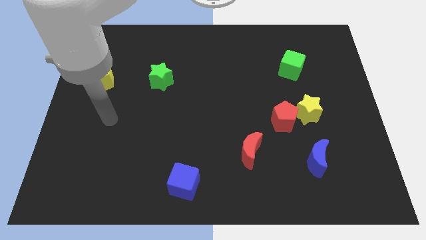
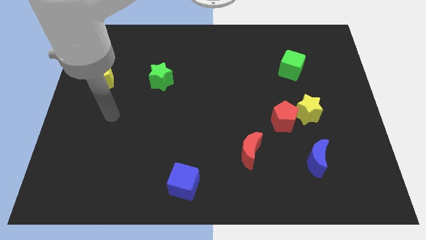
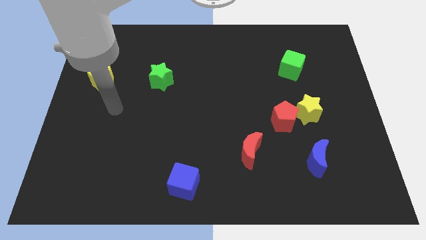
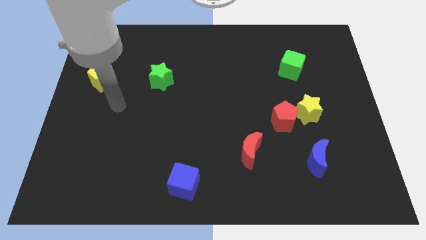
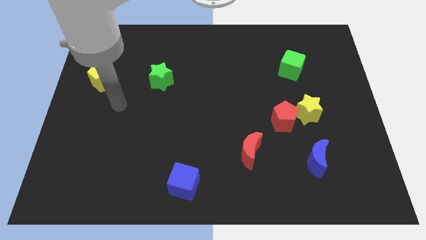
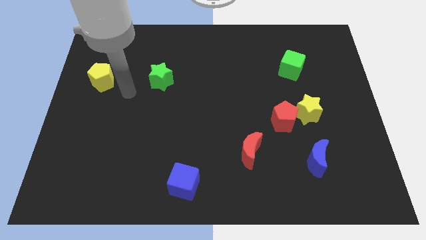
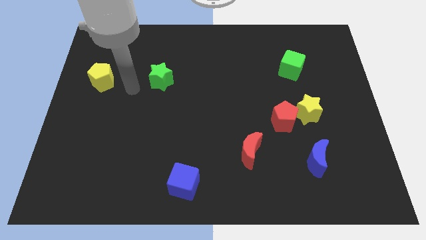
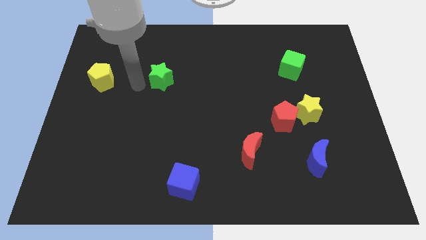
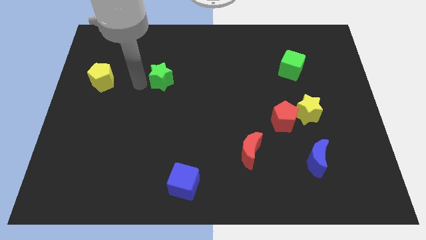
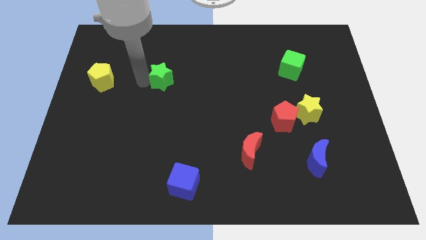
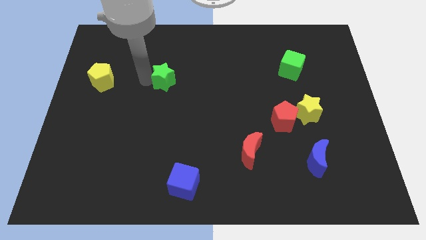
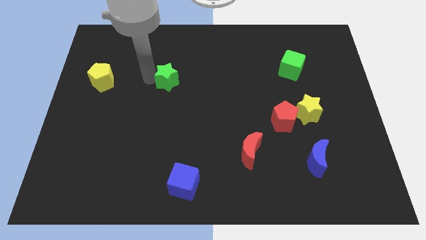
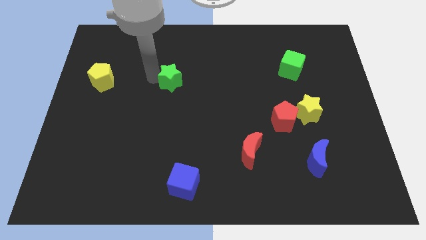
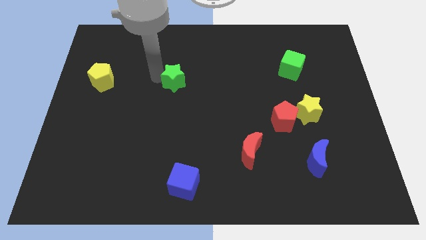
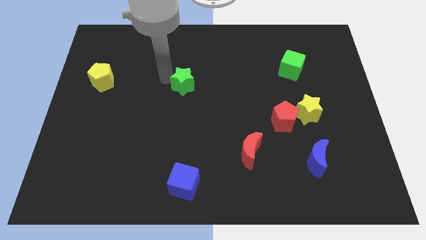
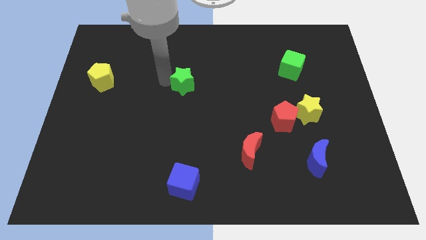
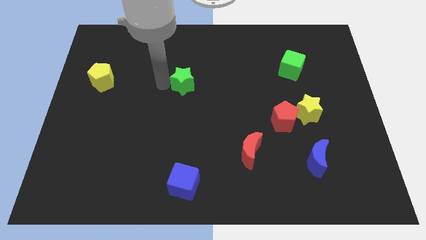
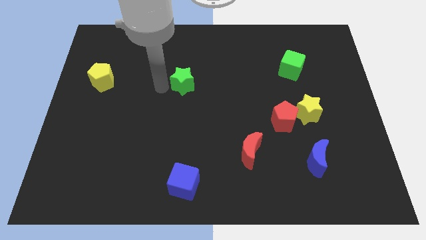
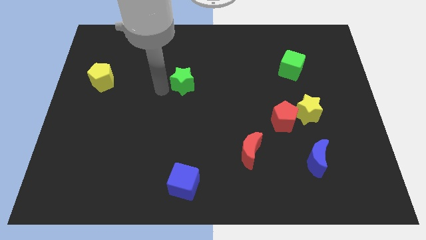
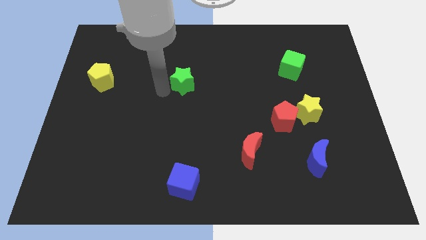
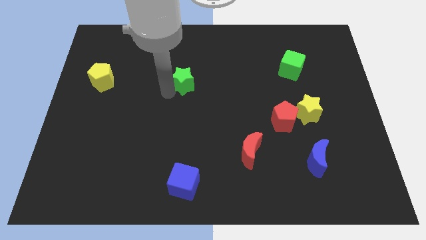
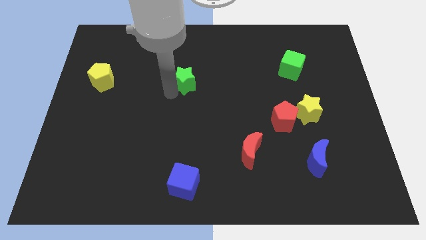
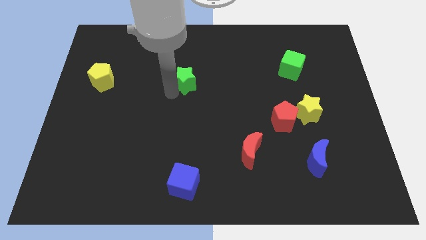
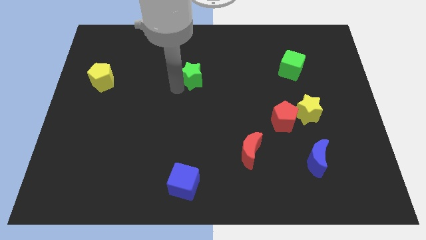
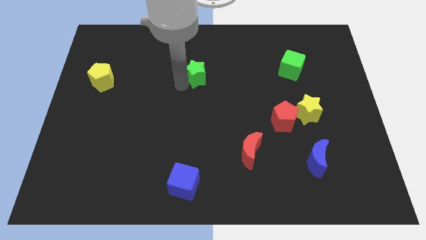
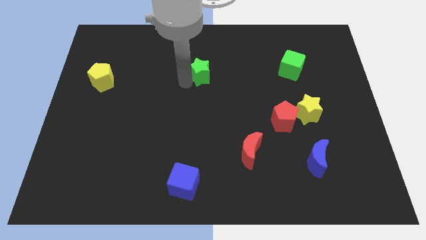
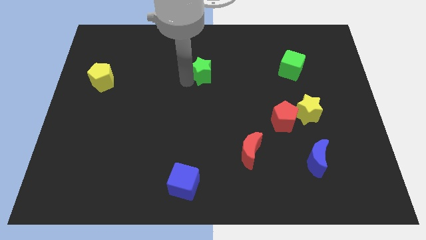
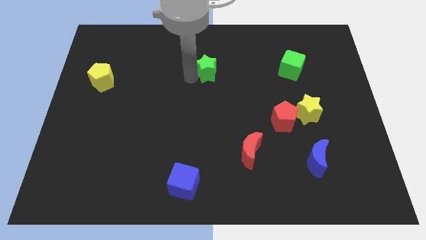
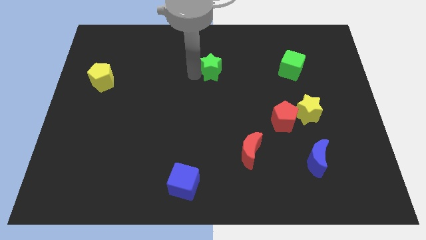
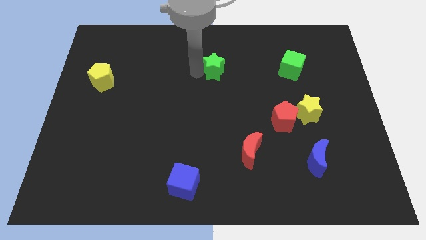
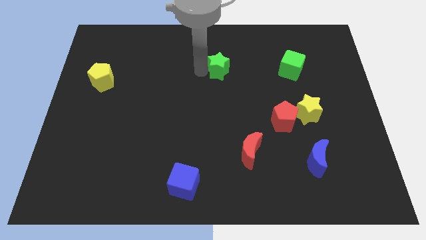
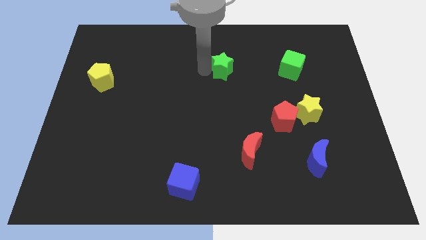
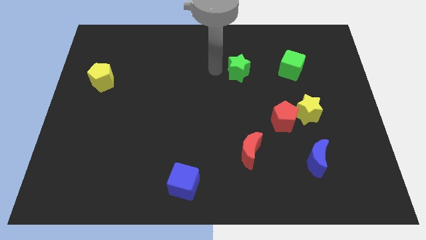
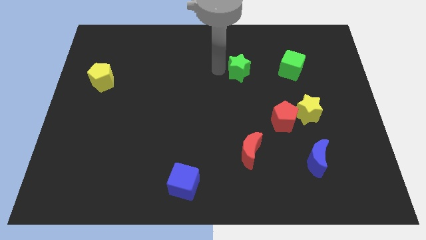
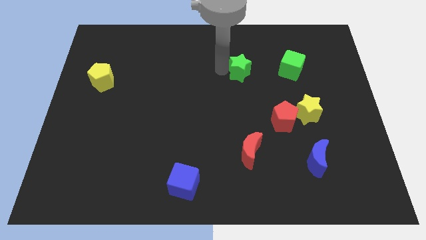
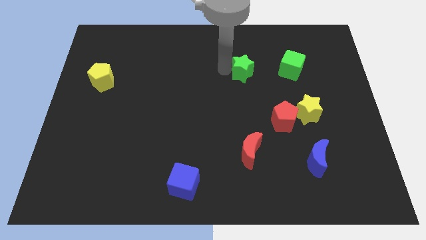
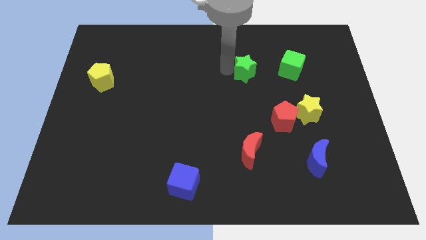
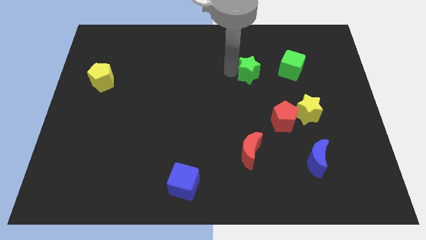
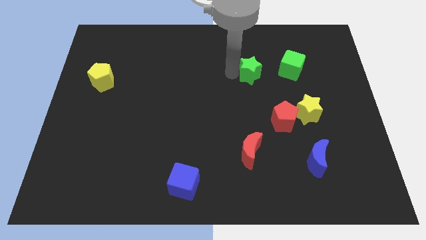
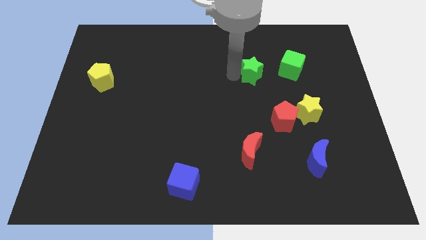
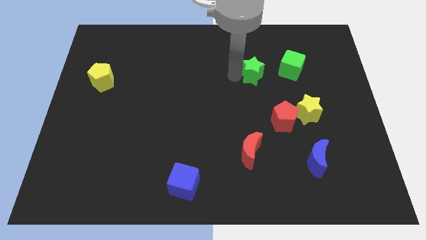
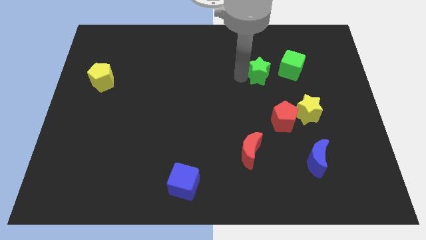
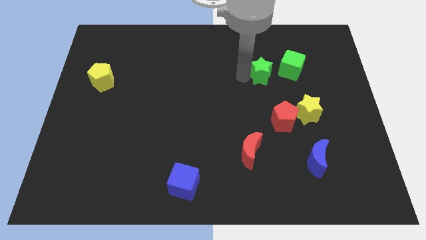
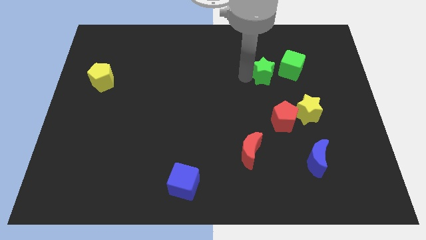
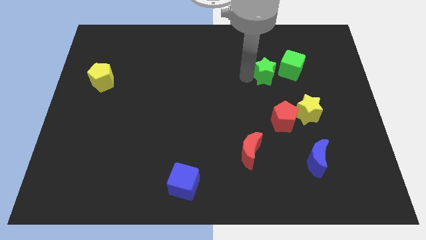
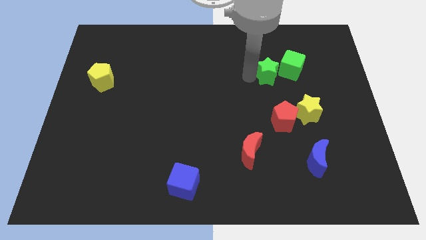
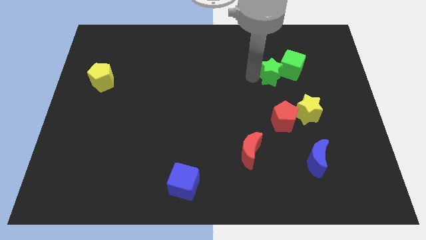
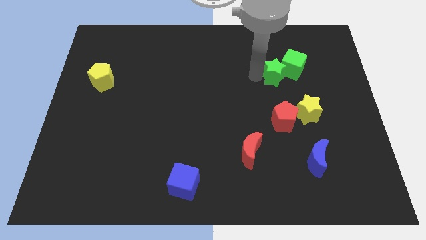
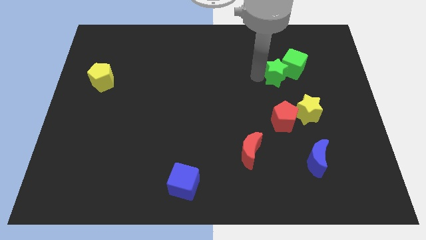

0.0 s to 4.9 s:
push the green star next to the green cube

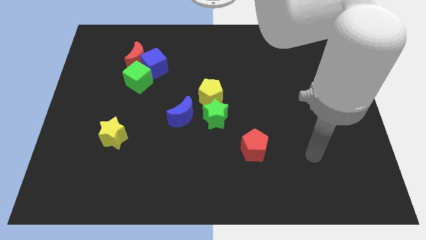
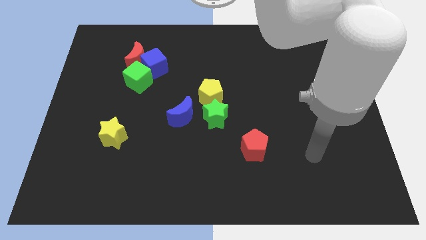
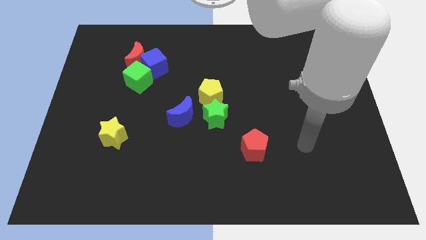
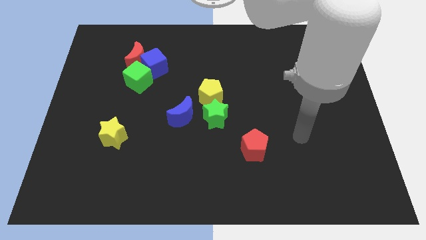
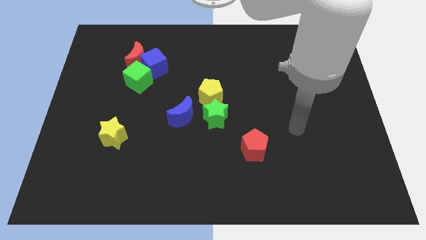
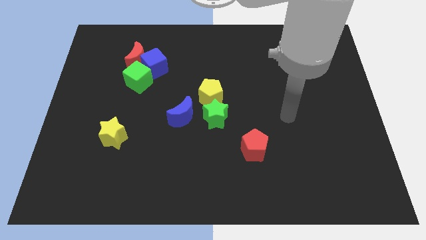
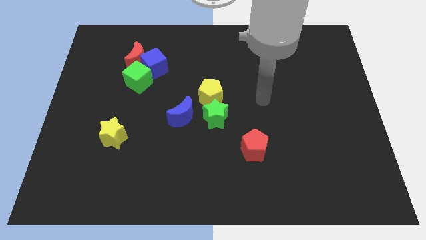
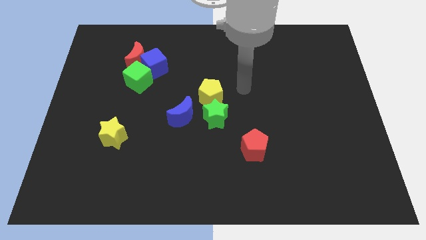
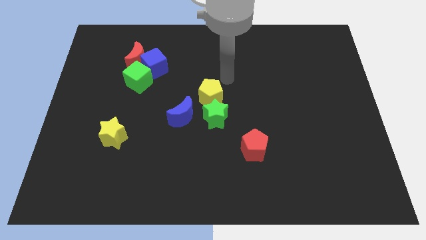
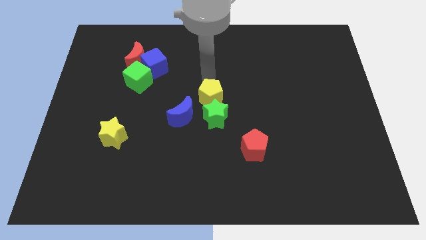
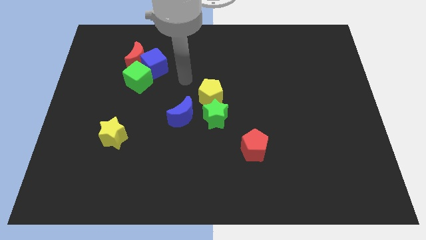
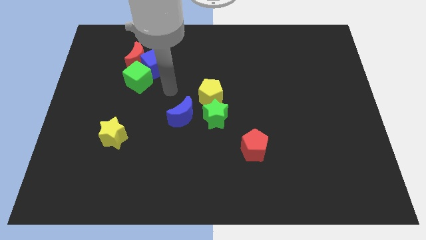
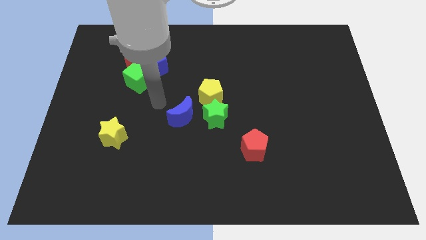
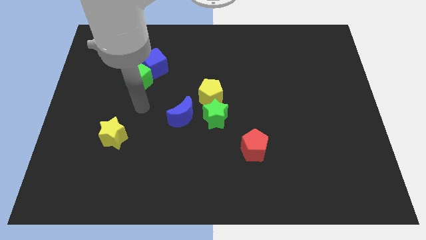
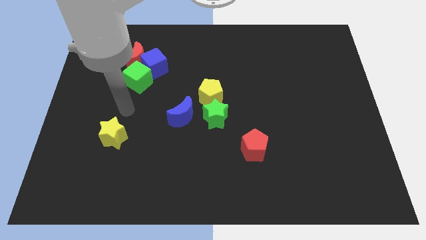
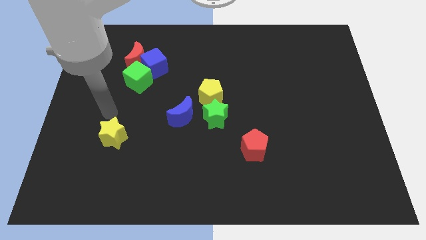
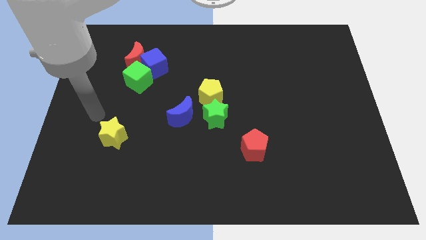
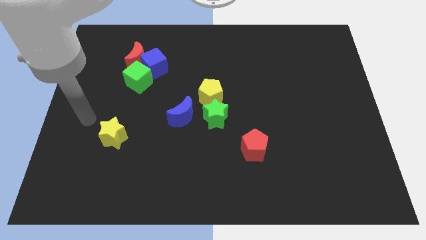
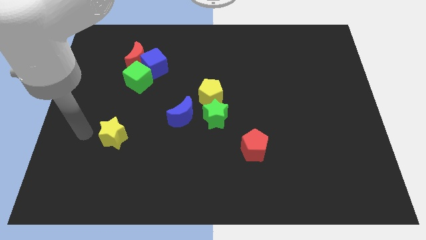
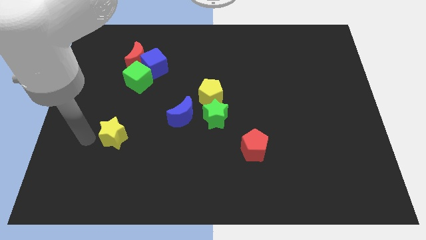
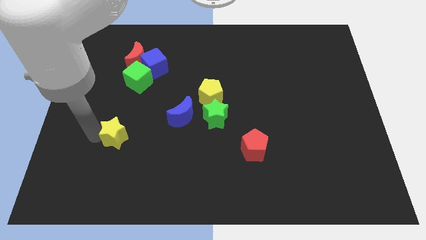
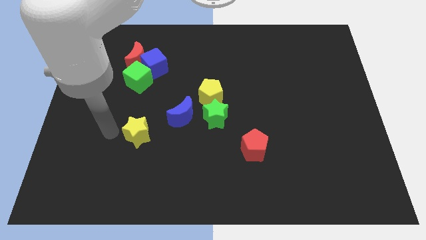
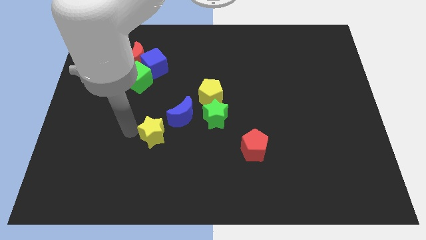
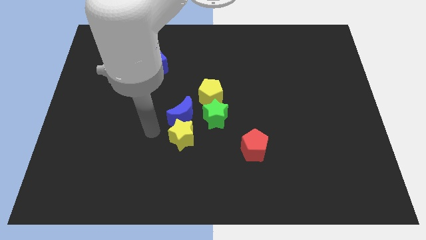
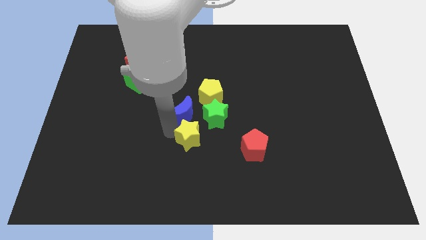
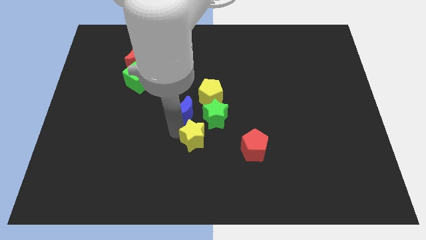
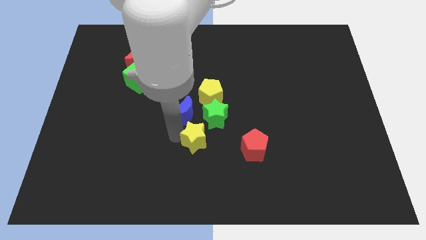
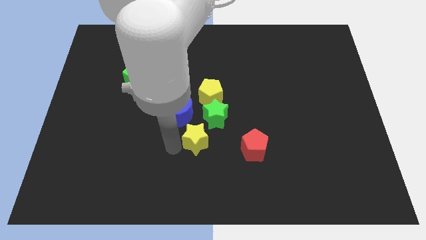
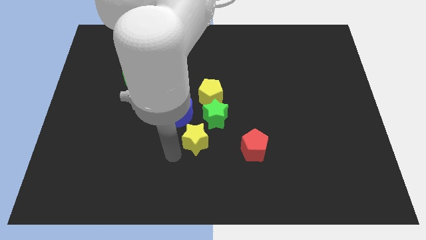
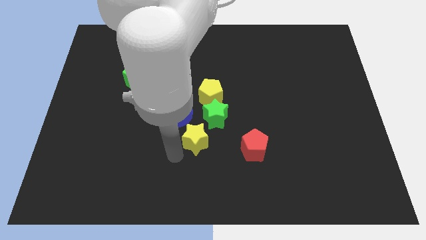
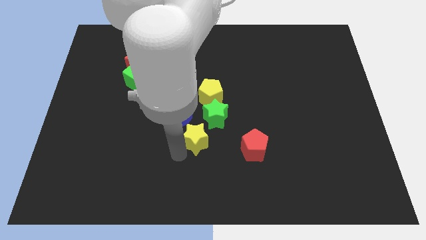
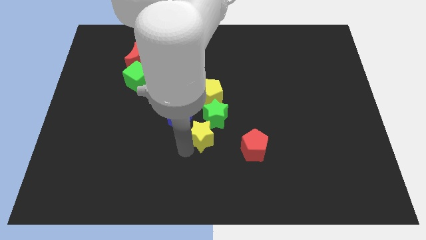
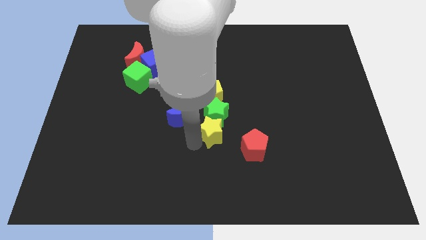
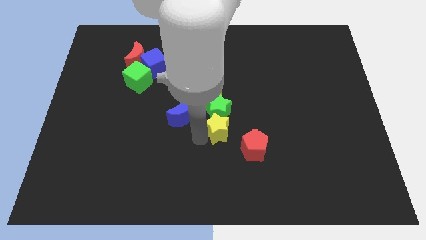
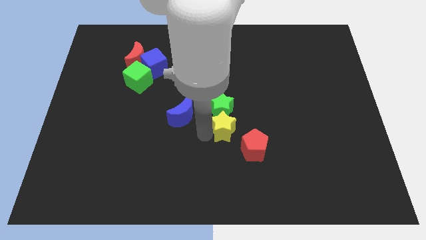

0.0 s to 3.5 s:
push the yellow star next to the green star
